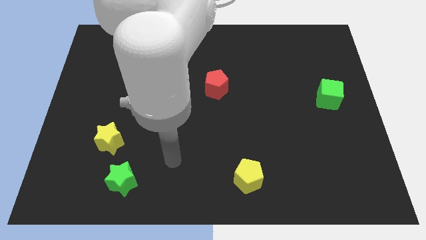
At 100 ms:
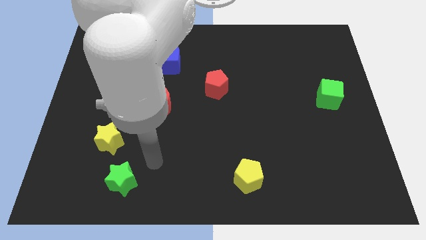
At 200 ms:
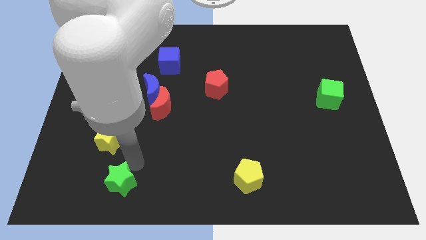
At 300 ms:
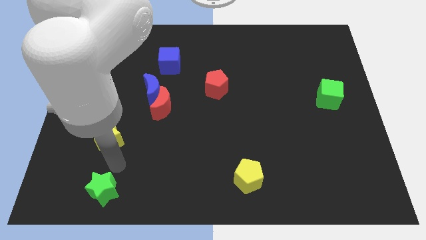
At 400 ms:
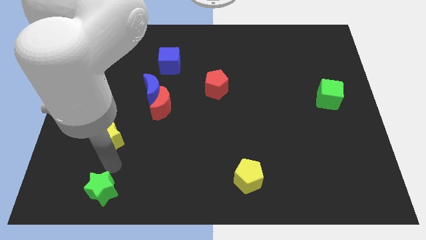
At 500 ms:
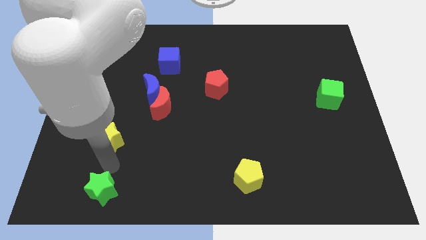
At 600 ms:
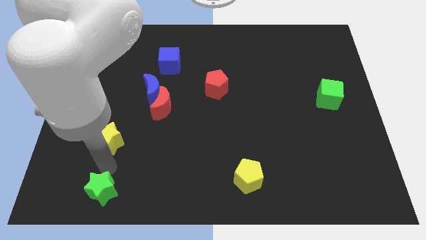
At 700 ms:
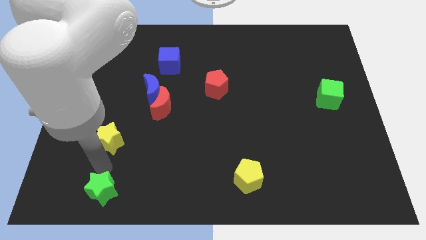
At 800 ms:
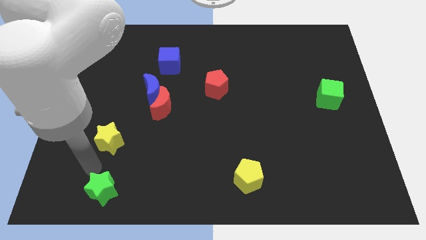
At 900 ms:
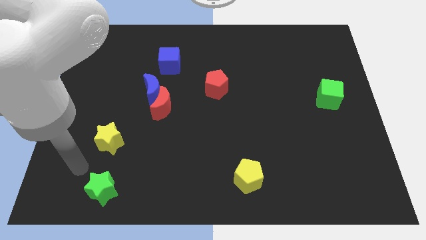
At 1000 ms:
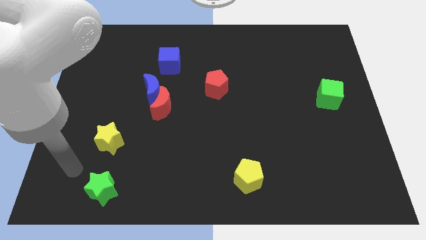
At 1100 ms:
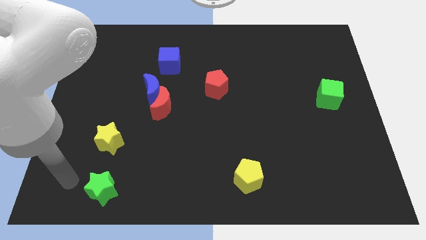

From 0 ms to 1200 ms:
slightly push the green star to the bottom of the board

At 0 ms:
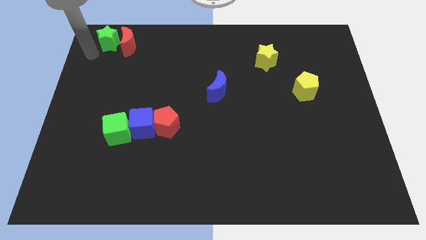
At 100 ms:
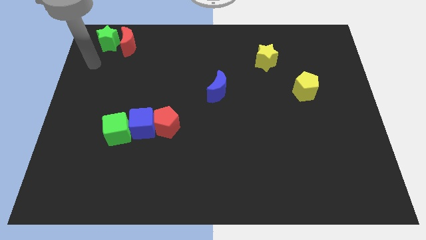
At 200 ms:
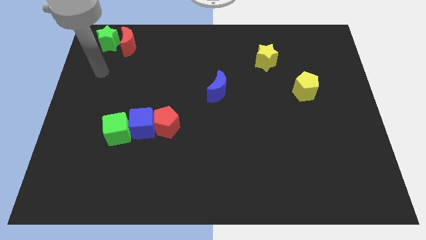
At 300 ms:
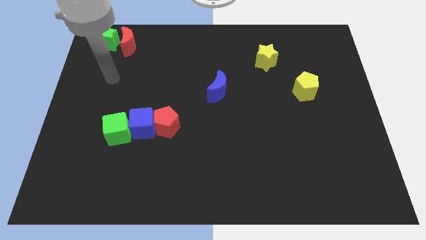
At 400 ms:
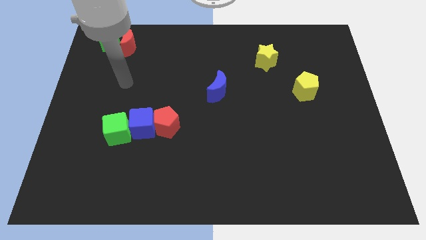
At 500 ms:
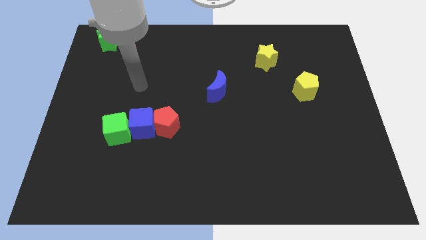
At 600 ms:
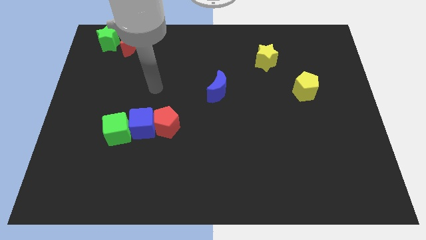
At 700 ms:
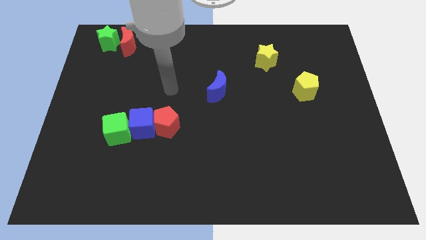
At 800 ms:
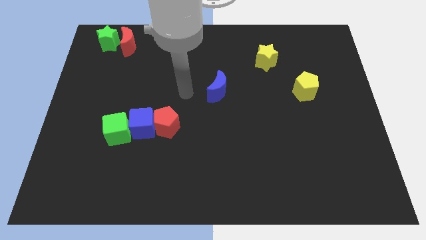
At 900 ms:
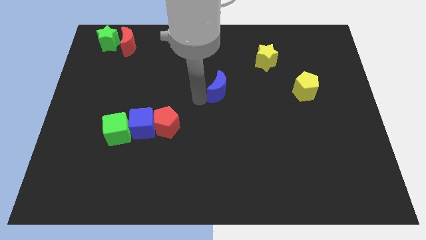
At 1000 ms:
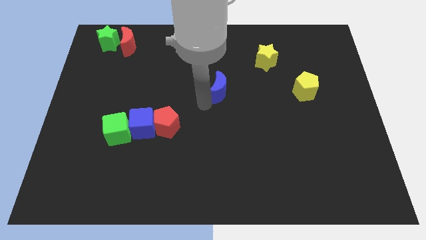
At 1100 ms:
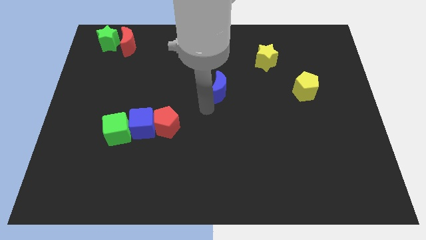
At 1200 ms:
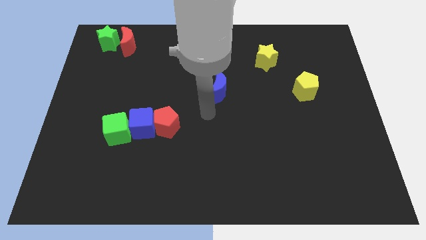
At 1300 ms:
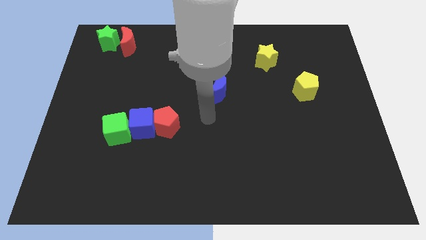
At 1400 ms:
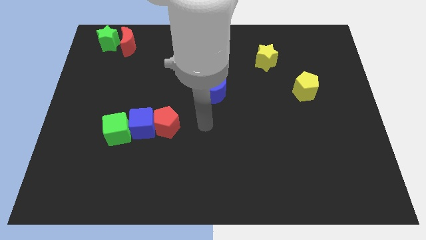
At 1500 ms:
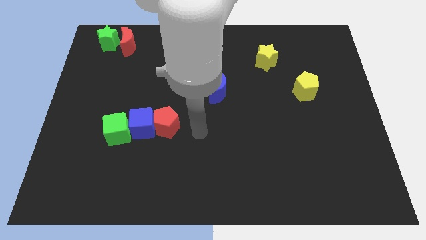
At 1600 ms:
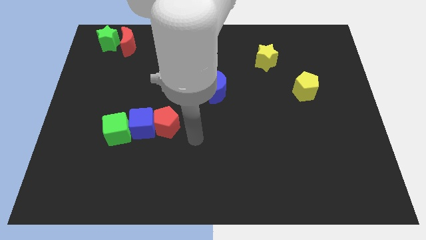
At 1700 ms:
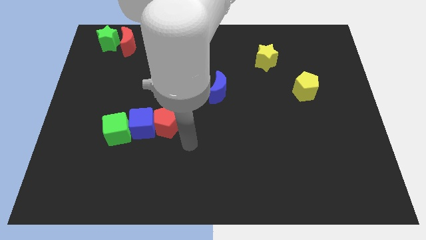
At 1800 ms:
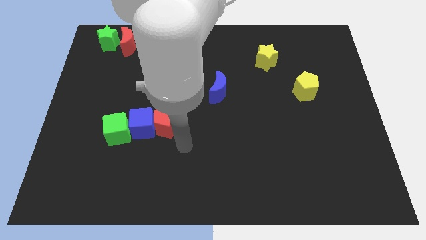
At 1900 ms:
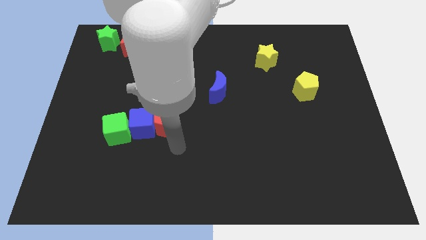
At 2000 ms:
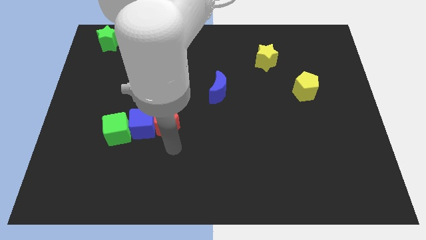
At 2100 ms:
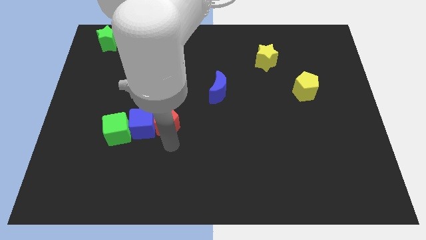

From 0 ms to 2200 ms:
move your arm away from the green star

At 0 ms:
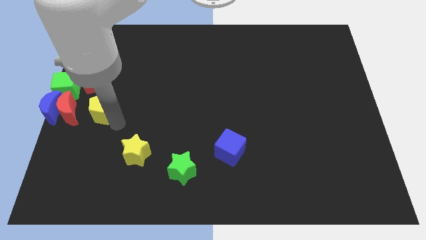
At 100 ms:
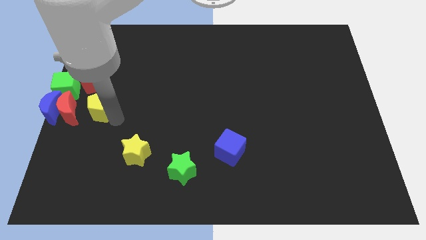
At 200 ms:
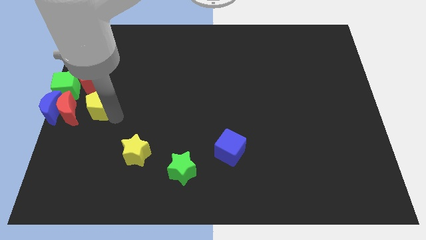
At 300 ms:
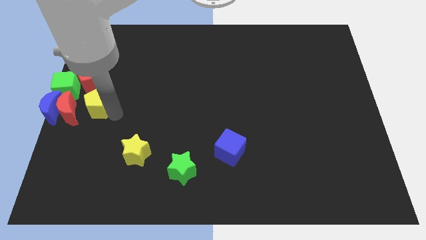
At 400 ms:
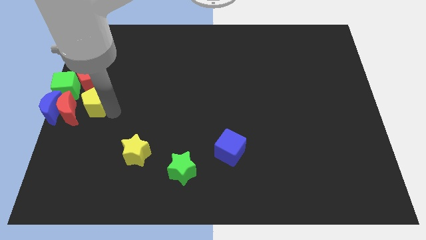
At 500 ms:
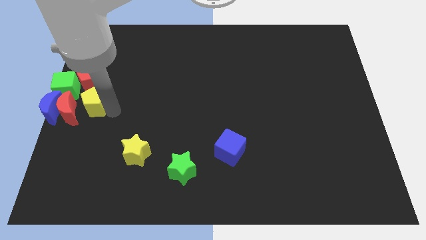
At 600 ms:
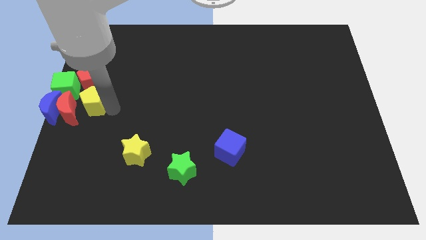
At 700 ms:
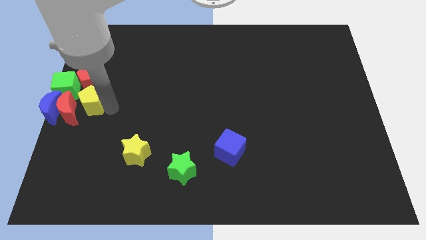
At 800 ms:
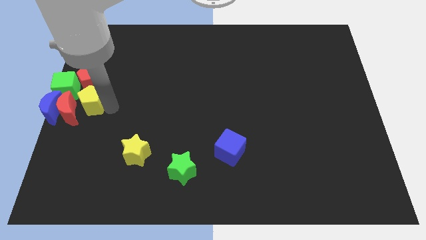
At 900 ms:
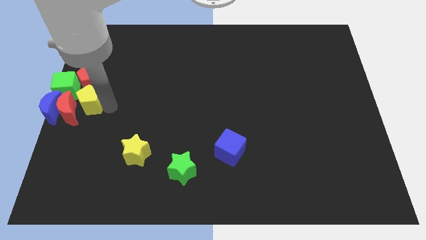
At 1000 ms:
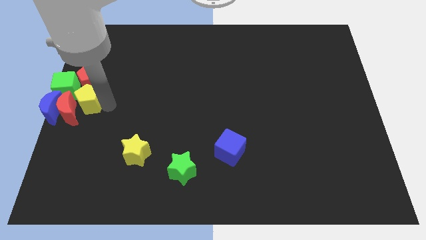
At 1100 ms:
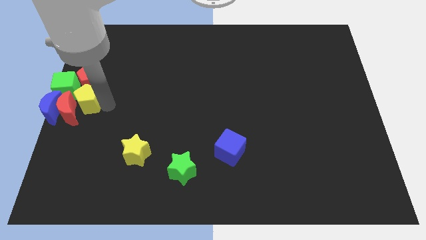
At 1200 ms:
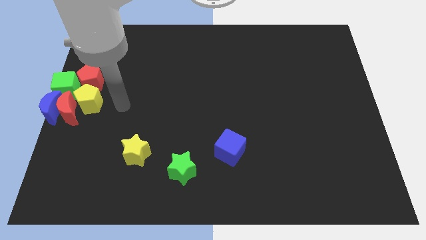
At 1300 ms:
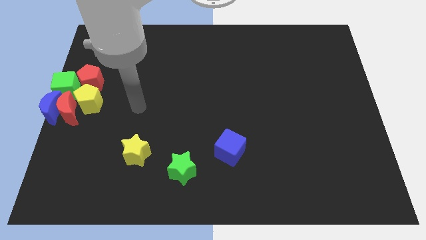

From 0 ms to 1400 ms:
slightly push the yellow pentagon into red pentagon

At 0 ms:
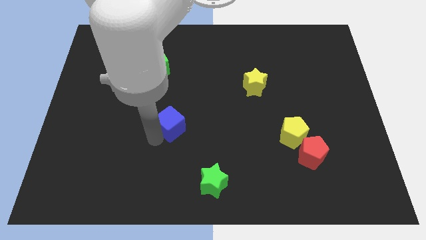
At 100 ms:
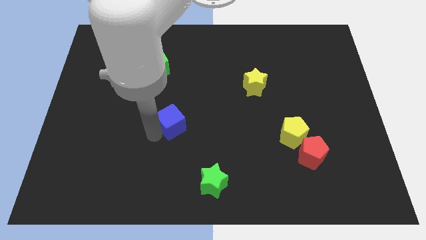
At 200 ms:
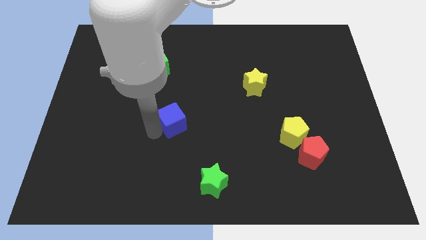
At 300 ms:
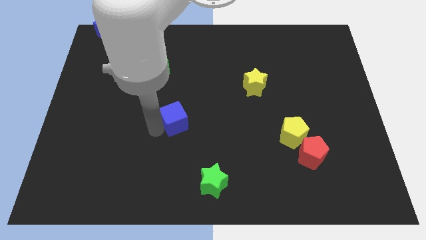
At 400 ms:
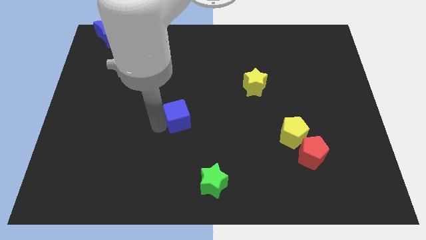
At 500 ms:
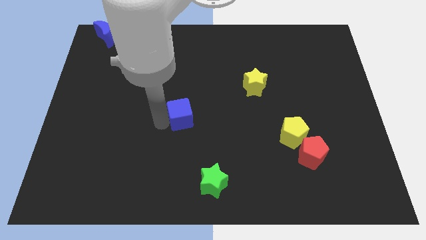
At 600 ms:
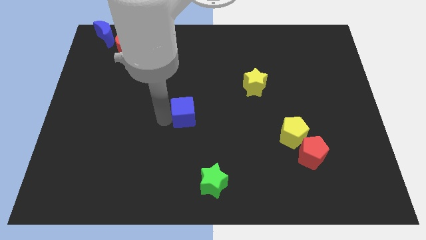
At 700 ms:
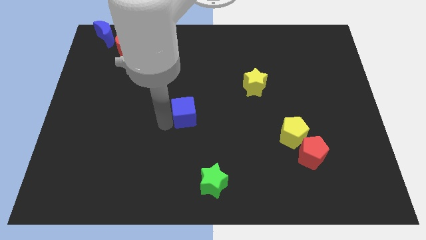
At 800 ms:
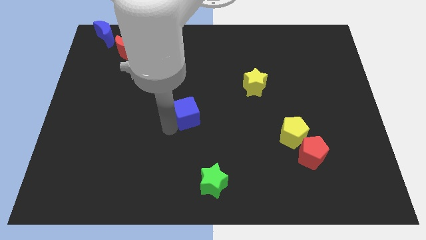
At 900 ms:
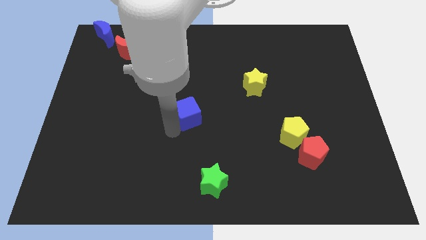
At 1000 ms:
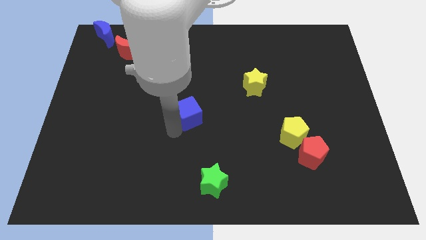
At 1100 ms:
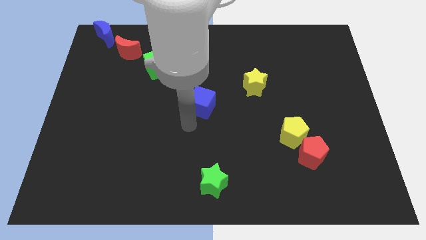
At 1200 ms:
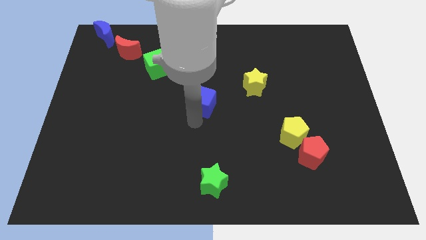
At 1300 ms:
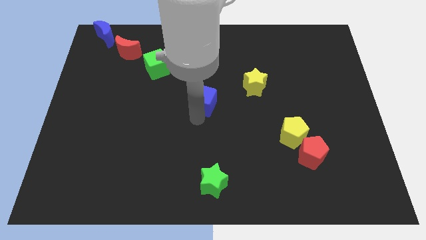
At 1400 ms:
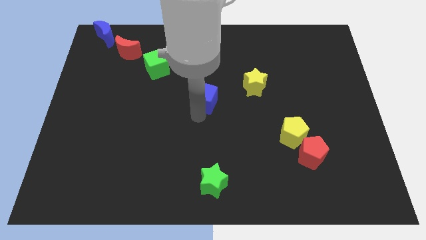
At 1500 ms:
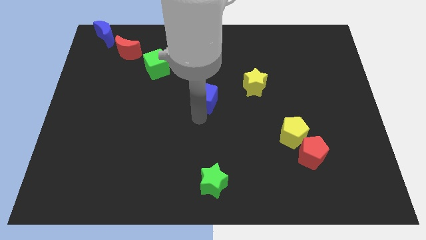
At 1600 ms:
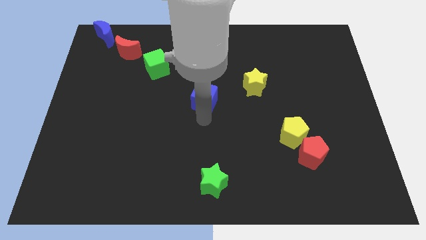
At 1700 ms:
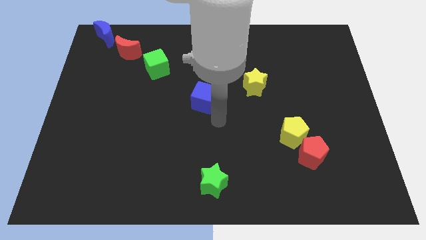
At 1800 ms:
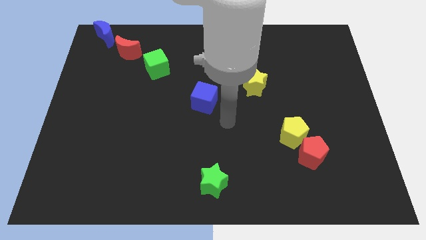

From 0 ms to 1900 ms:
put the blue cube vertically above the green star

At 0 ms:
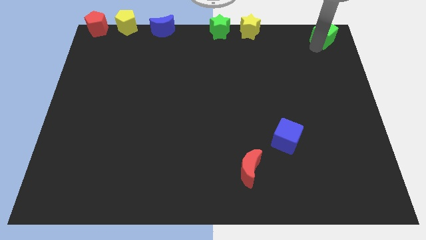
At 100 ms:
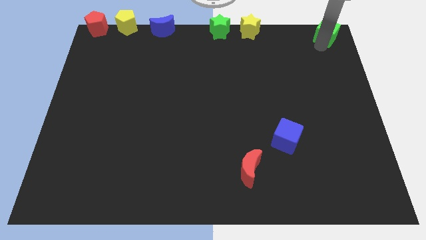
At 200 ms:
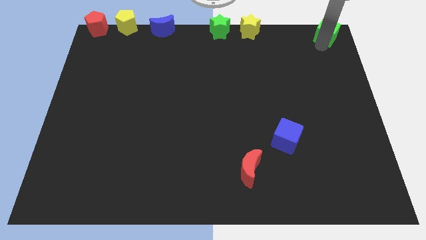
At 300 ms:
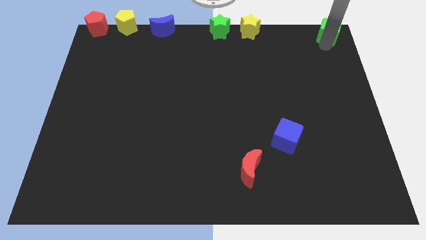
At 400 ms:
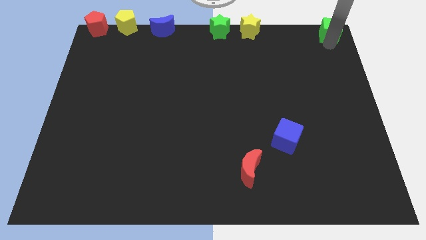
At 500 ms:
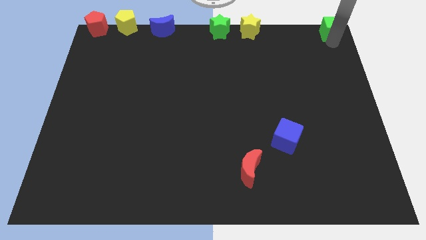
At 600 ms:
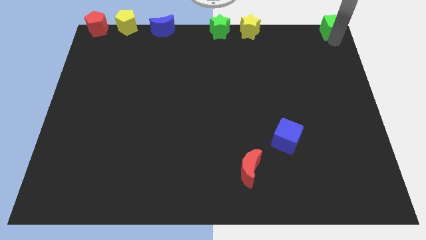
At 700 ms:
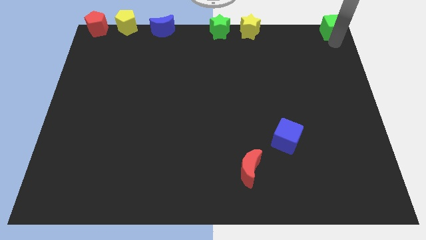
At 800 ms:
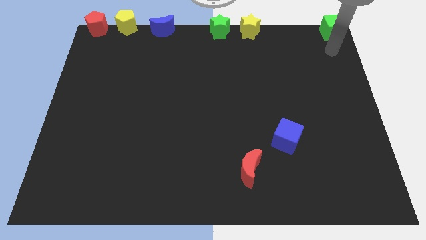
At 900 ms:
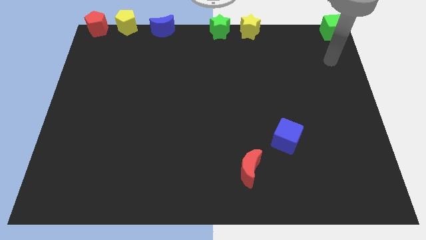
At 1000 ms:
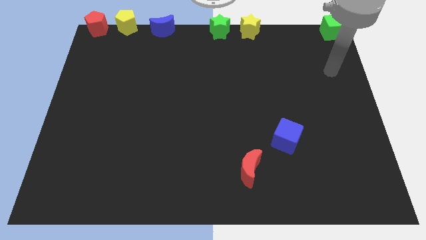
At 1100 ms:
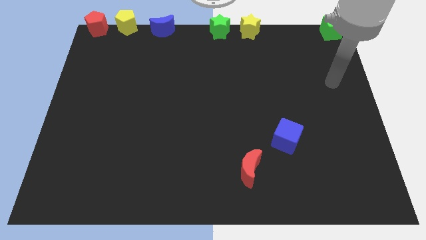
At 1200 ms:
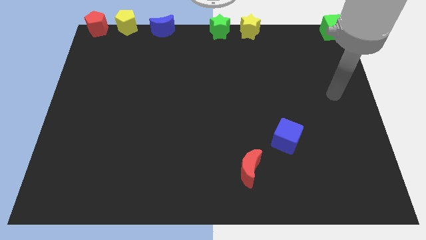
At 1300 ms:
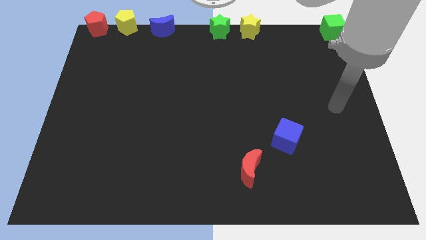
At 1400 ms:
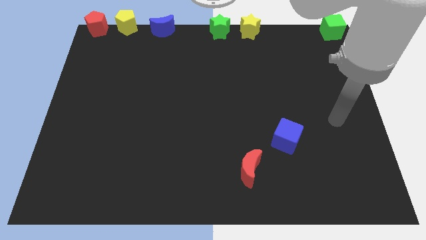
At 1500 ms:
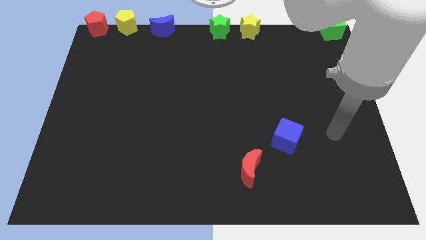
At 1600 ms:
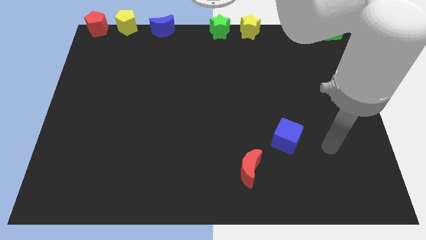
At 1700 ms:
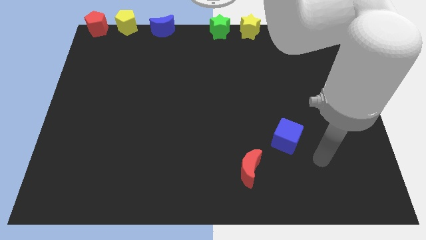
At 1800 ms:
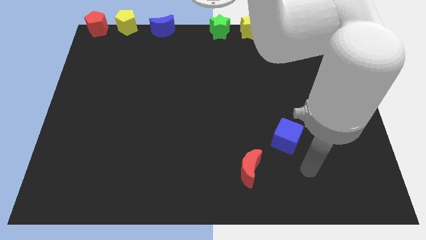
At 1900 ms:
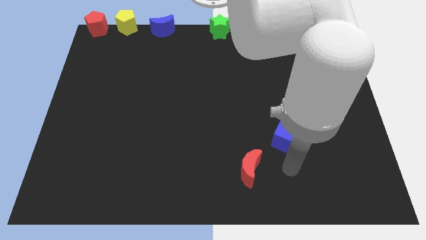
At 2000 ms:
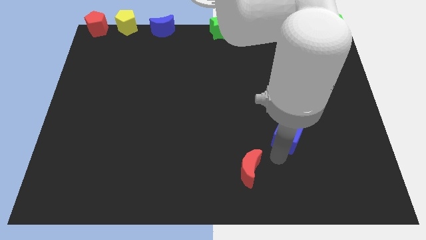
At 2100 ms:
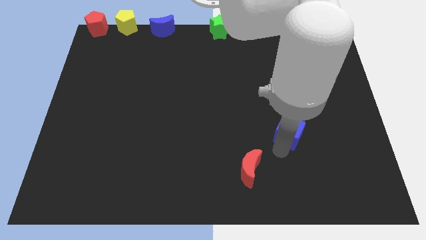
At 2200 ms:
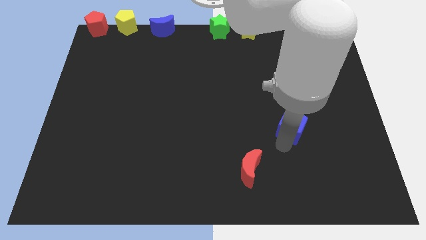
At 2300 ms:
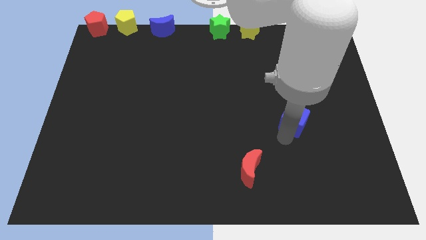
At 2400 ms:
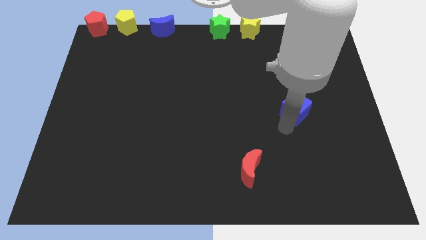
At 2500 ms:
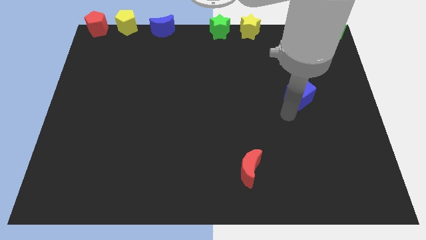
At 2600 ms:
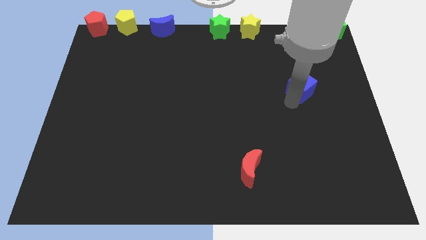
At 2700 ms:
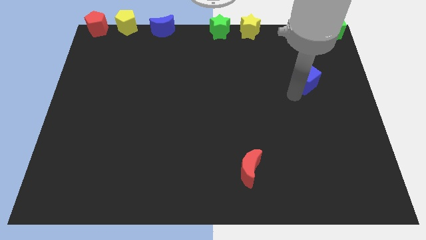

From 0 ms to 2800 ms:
drag blue cube towards right side of the board
